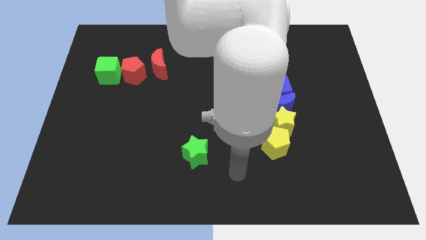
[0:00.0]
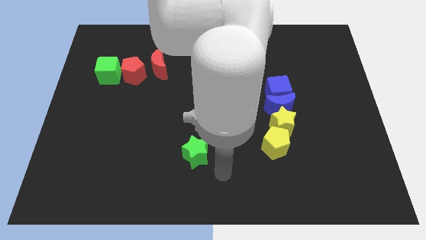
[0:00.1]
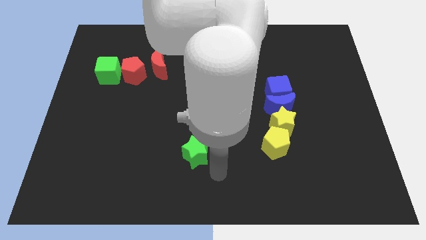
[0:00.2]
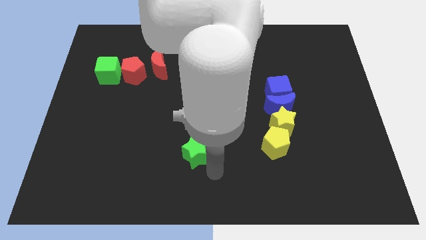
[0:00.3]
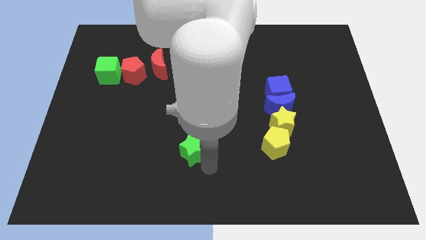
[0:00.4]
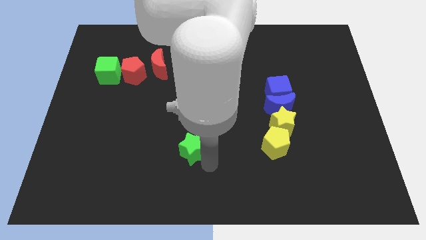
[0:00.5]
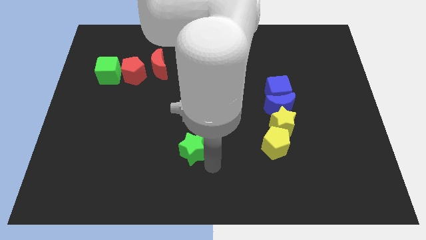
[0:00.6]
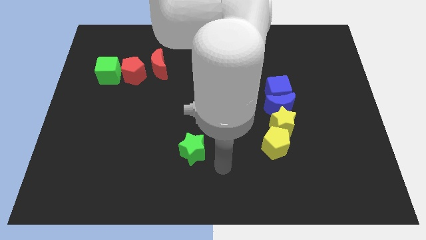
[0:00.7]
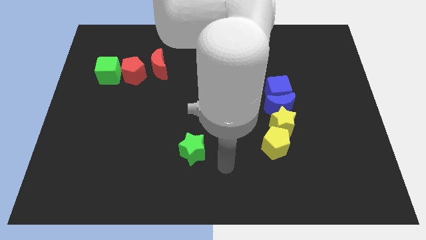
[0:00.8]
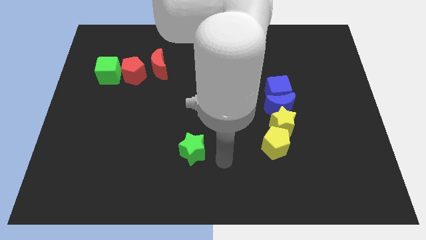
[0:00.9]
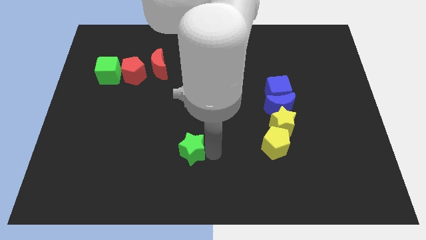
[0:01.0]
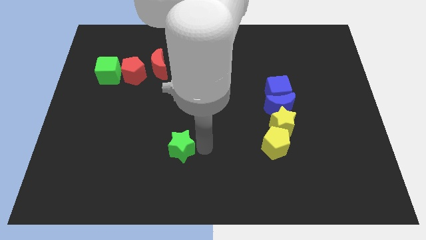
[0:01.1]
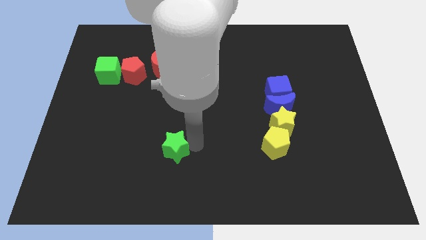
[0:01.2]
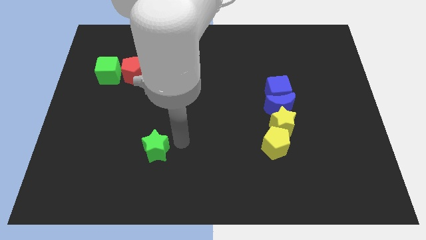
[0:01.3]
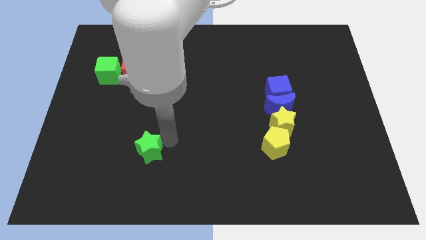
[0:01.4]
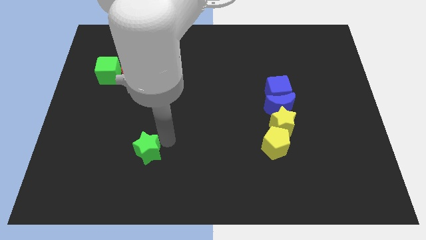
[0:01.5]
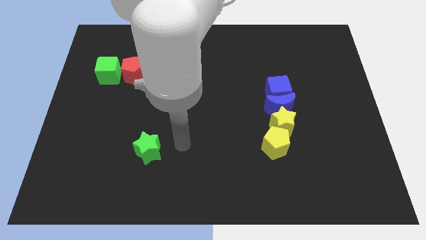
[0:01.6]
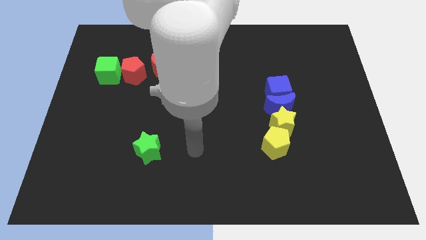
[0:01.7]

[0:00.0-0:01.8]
move the green star slightly to the left

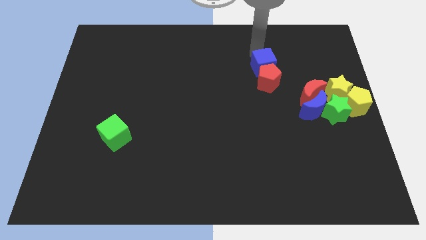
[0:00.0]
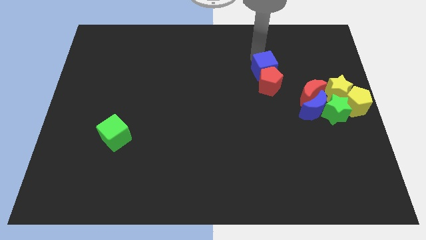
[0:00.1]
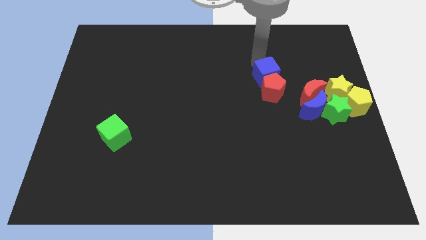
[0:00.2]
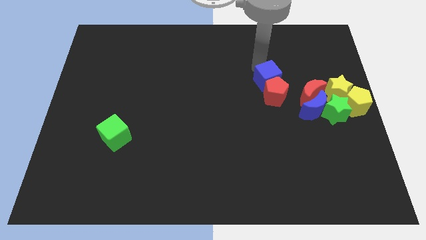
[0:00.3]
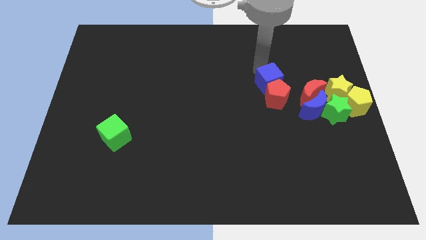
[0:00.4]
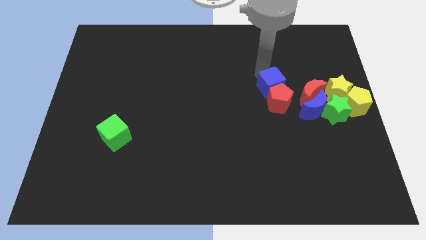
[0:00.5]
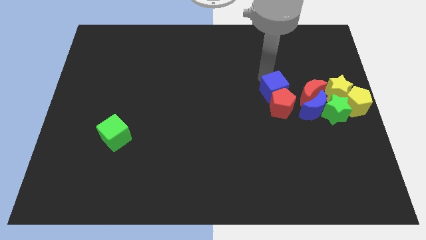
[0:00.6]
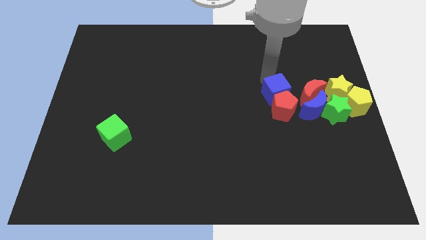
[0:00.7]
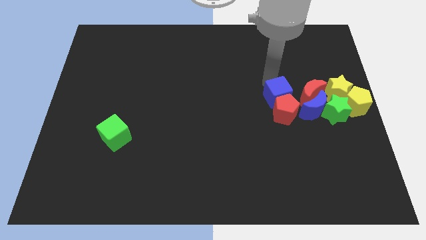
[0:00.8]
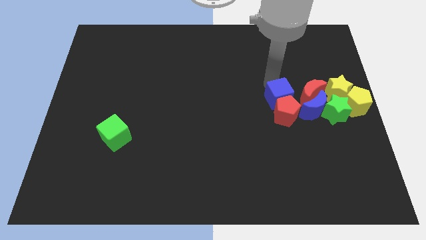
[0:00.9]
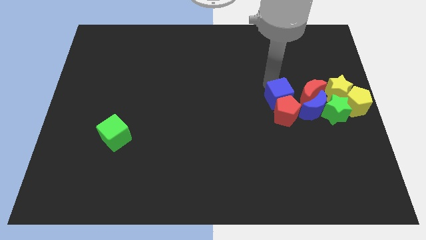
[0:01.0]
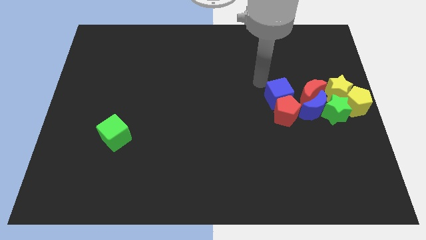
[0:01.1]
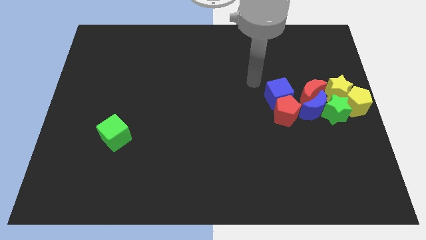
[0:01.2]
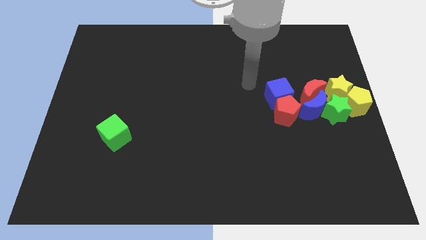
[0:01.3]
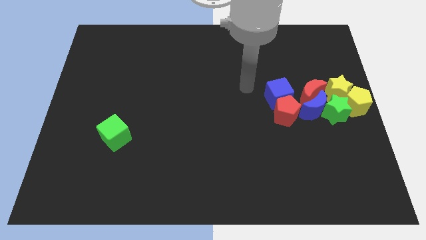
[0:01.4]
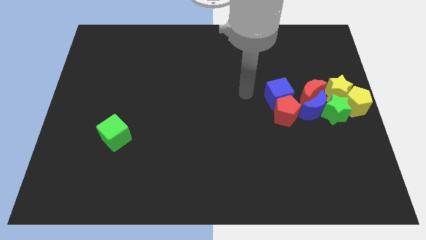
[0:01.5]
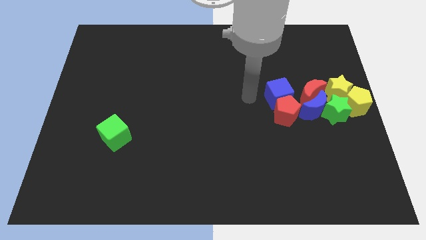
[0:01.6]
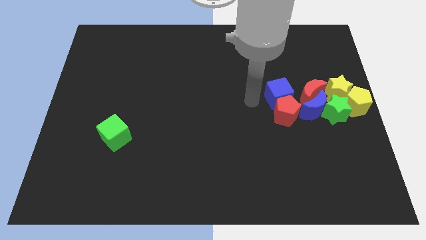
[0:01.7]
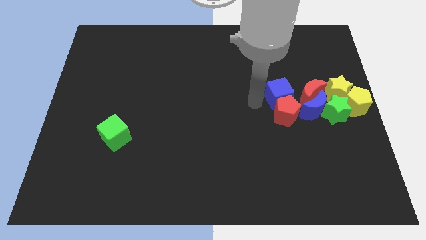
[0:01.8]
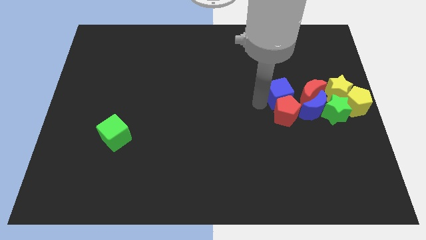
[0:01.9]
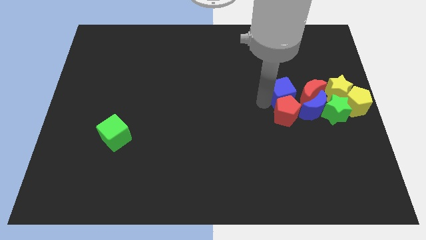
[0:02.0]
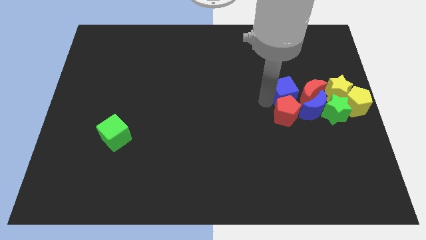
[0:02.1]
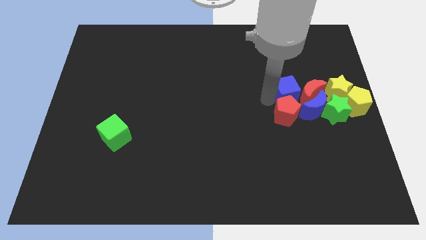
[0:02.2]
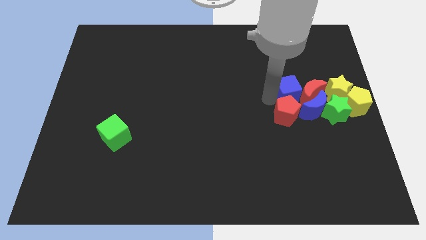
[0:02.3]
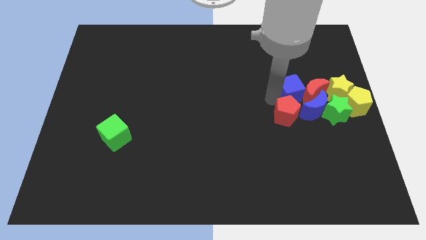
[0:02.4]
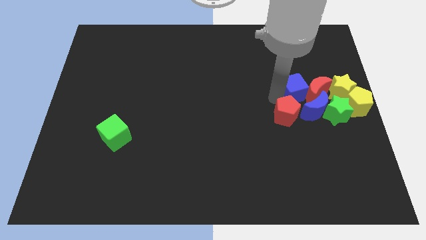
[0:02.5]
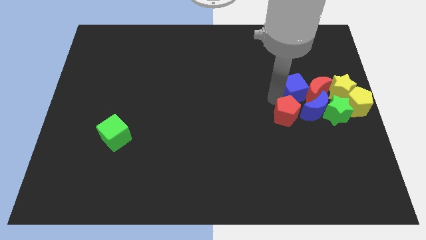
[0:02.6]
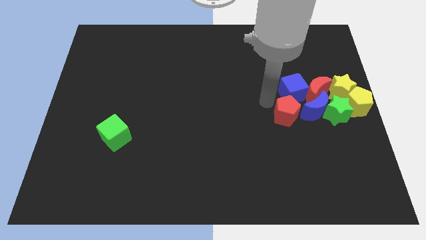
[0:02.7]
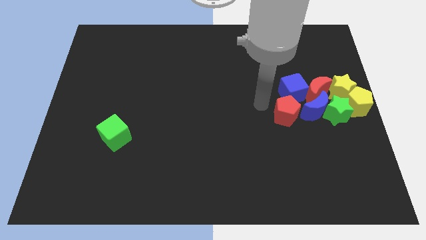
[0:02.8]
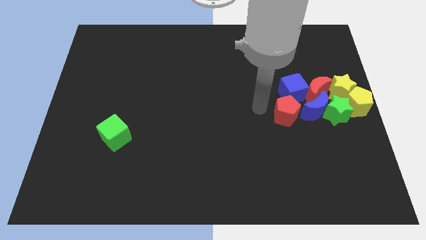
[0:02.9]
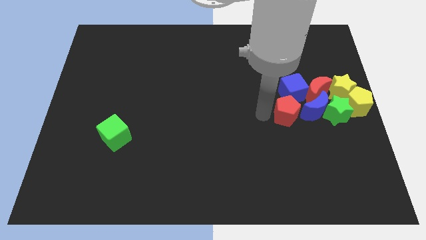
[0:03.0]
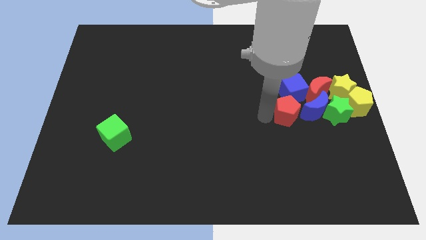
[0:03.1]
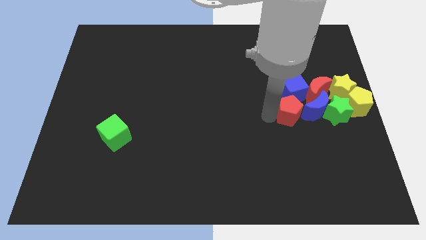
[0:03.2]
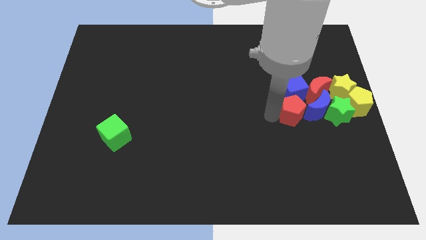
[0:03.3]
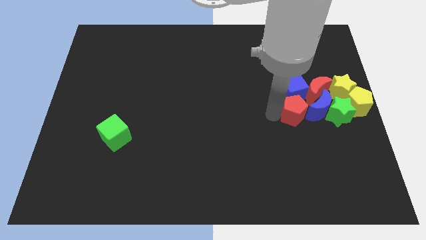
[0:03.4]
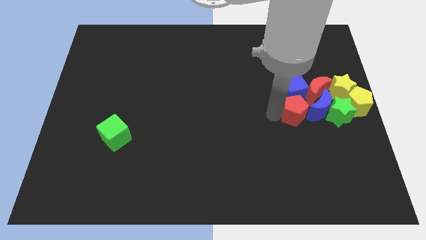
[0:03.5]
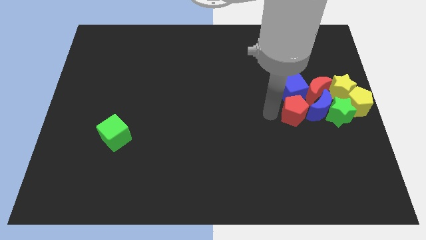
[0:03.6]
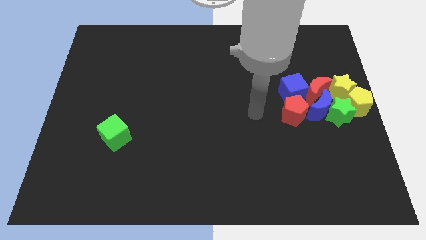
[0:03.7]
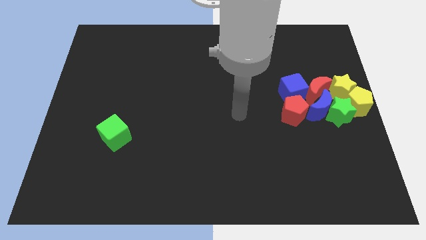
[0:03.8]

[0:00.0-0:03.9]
place the red pentagon and blue cube into red and blue moons

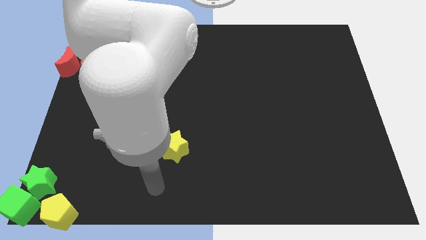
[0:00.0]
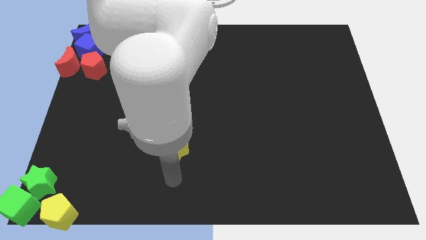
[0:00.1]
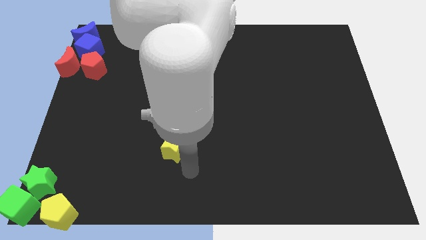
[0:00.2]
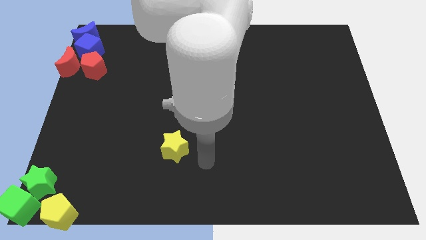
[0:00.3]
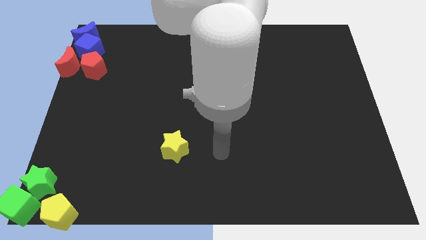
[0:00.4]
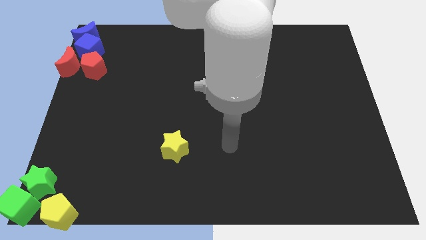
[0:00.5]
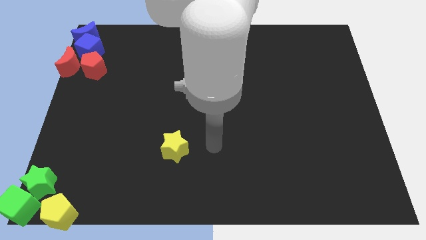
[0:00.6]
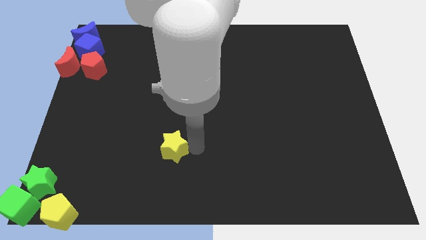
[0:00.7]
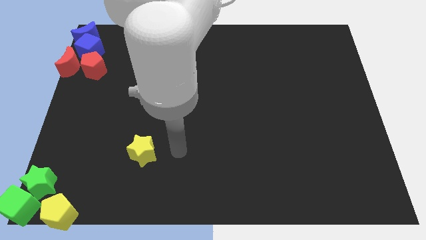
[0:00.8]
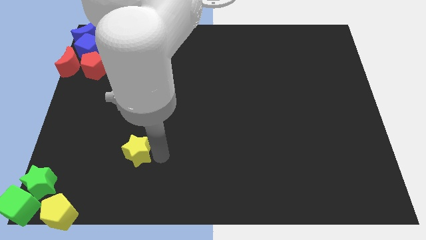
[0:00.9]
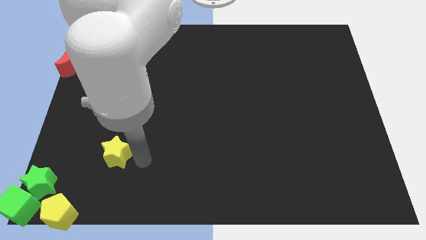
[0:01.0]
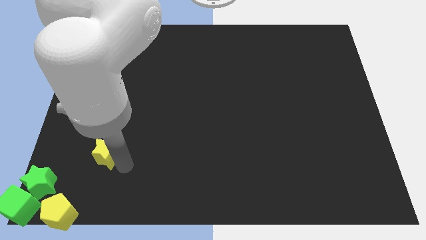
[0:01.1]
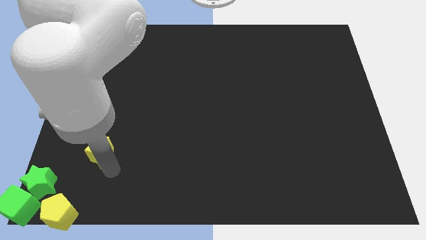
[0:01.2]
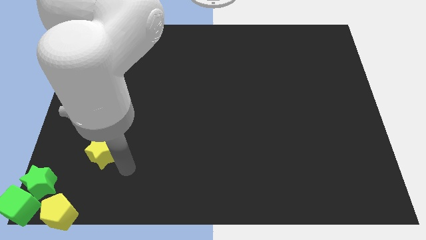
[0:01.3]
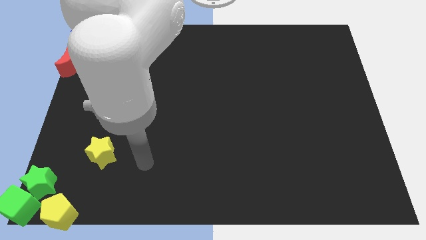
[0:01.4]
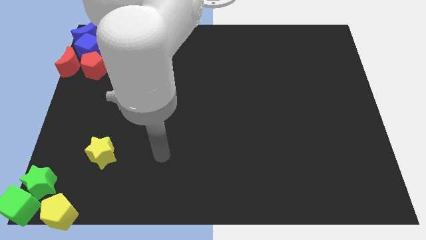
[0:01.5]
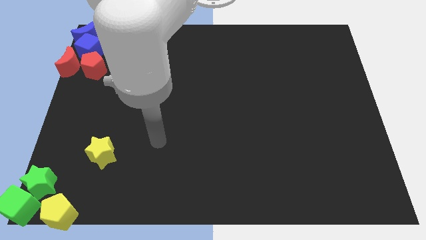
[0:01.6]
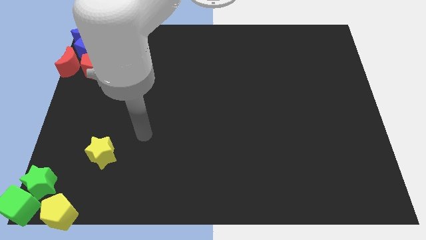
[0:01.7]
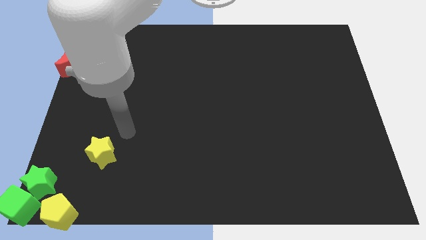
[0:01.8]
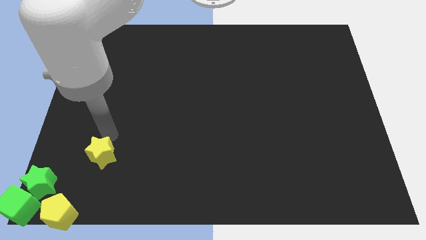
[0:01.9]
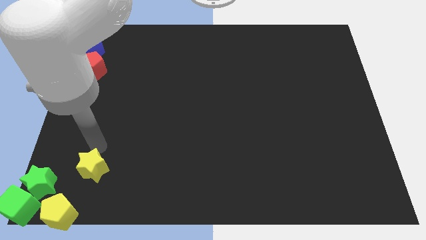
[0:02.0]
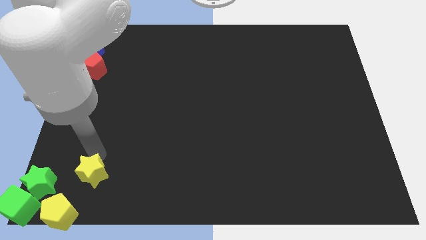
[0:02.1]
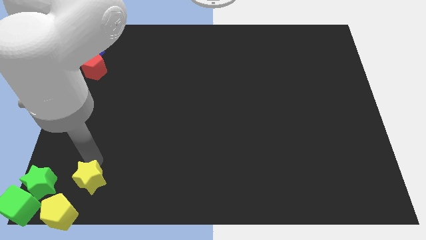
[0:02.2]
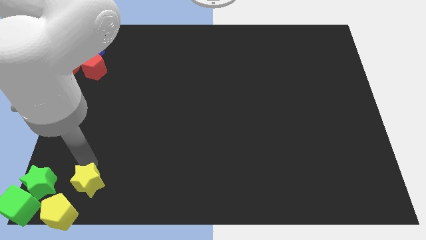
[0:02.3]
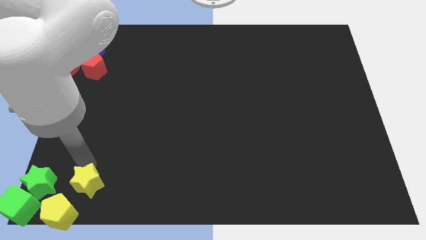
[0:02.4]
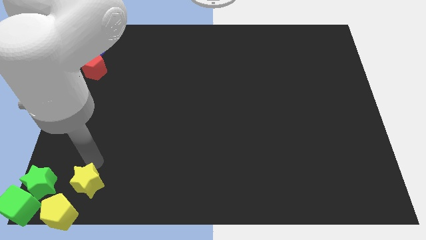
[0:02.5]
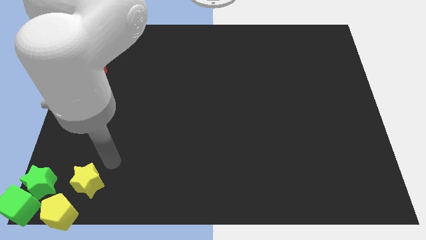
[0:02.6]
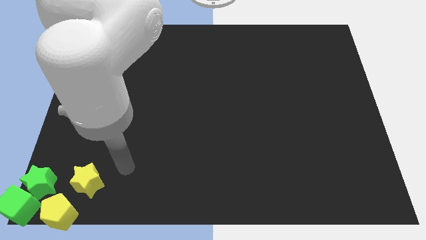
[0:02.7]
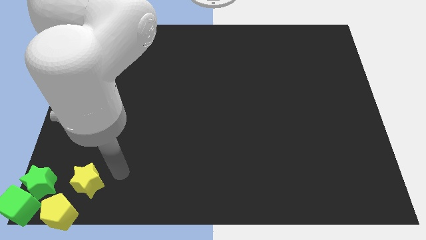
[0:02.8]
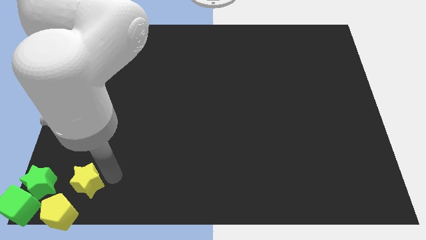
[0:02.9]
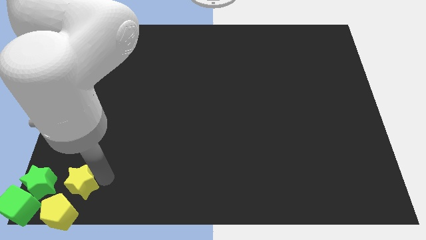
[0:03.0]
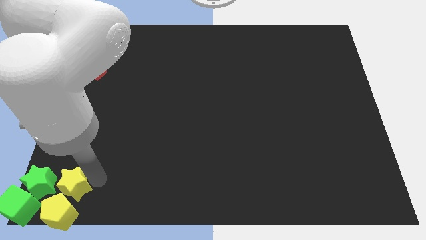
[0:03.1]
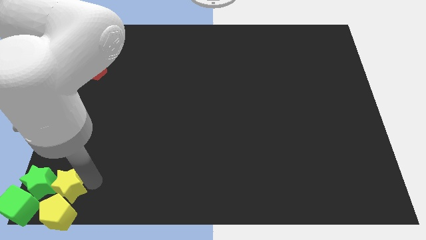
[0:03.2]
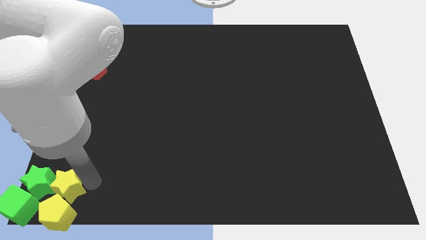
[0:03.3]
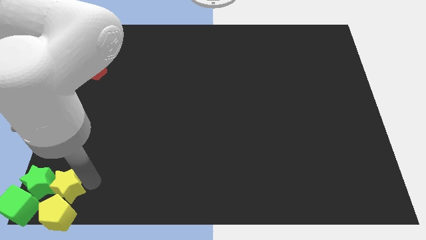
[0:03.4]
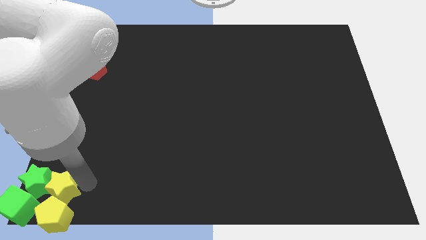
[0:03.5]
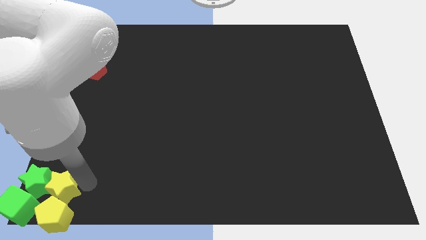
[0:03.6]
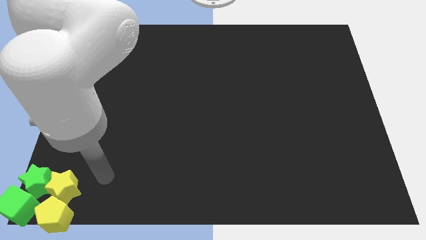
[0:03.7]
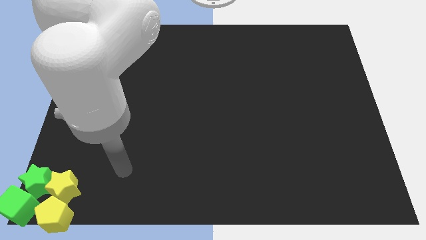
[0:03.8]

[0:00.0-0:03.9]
push the yellow star towards the bottom left corner
